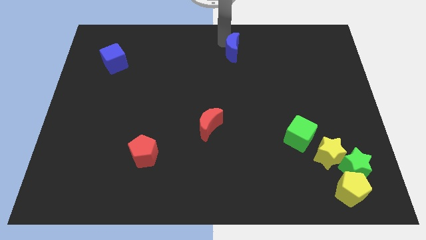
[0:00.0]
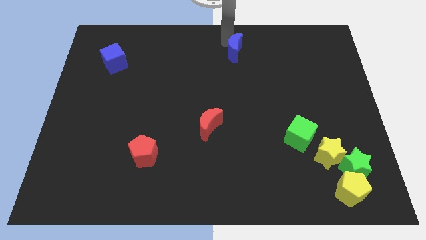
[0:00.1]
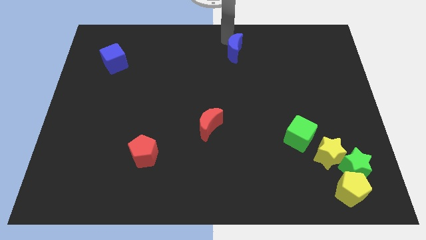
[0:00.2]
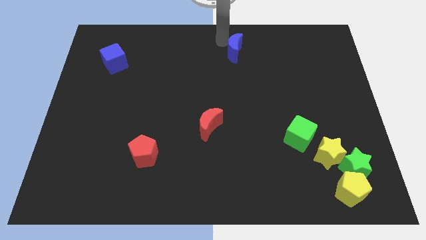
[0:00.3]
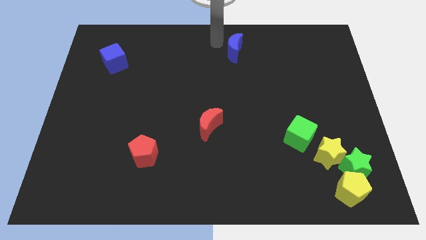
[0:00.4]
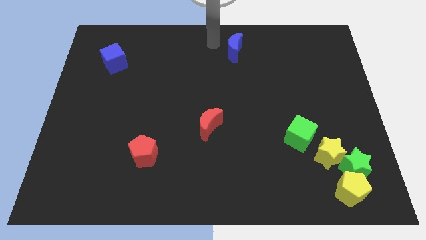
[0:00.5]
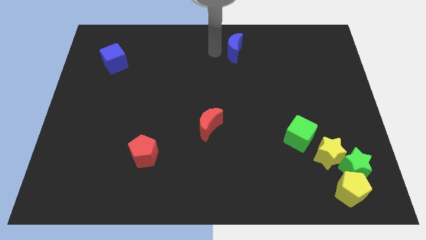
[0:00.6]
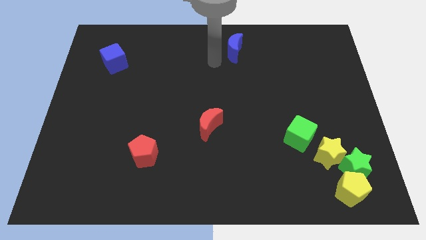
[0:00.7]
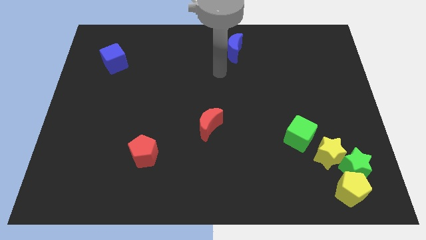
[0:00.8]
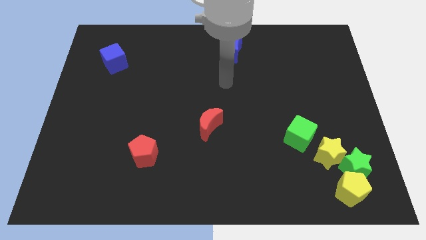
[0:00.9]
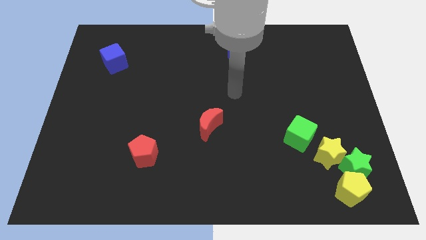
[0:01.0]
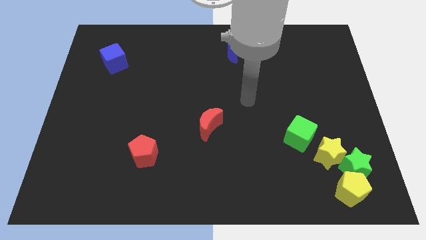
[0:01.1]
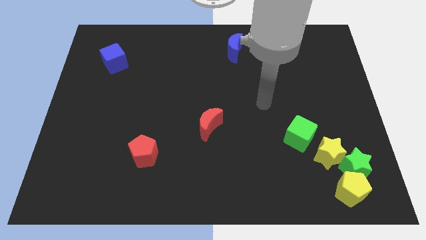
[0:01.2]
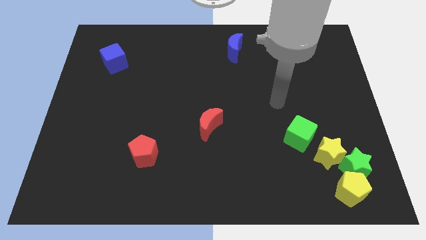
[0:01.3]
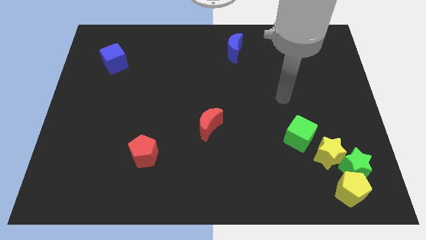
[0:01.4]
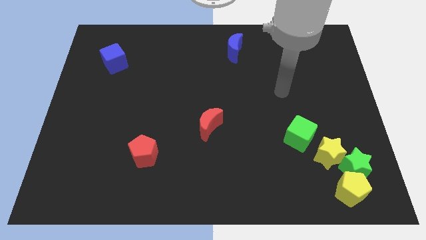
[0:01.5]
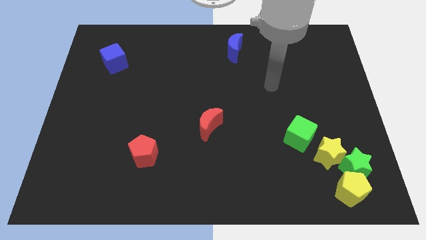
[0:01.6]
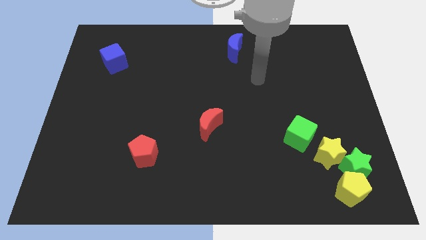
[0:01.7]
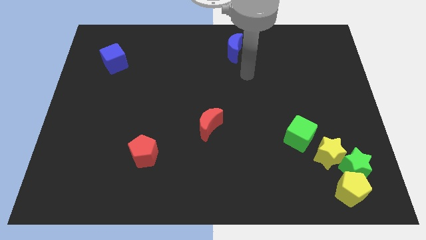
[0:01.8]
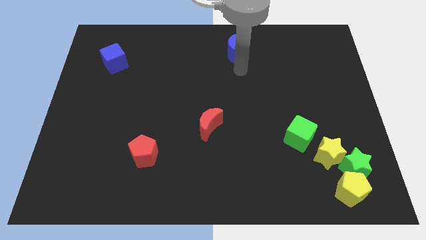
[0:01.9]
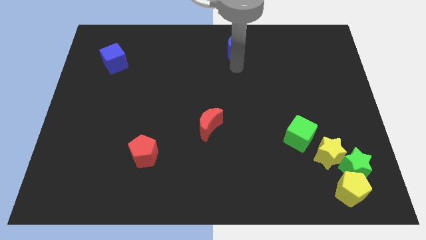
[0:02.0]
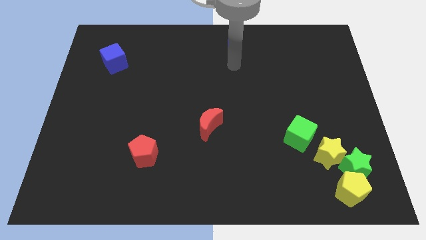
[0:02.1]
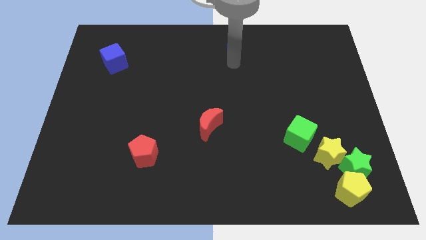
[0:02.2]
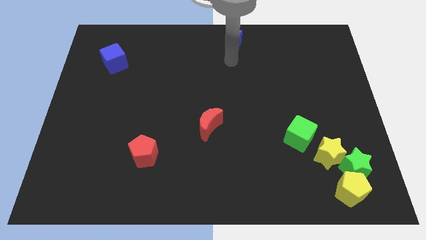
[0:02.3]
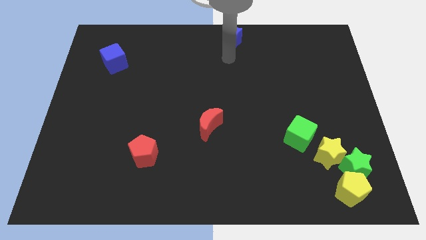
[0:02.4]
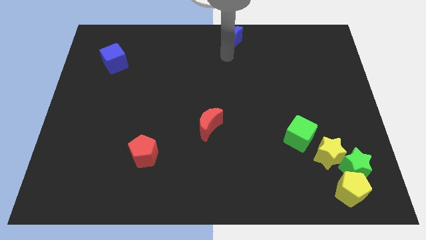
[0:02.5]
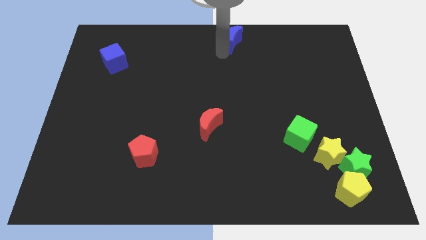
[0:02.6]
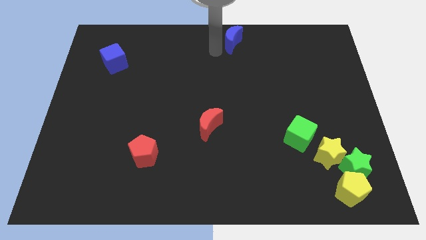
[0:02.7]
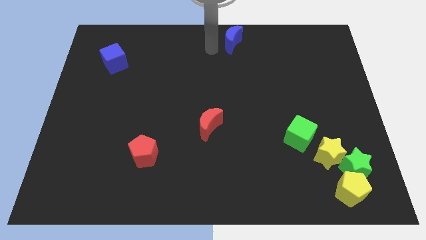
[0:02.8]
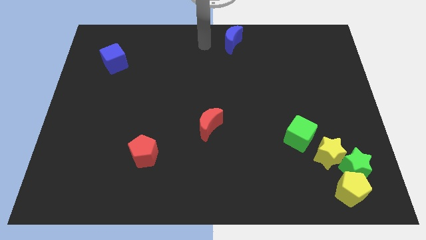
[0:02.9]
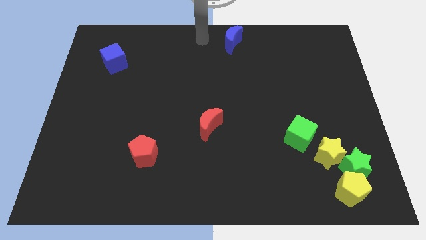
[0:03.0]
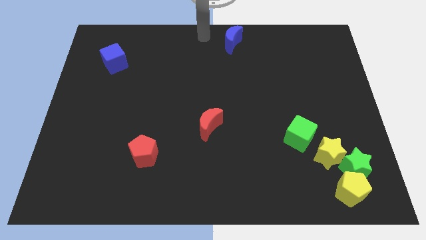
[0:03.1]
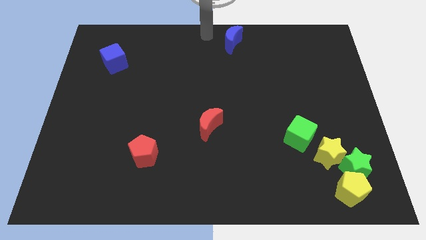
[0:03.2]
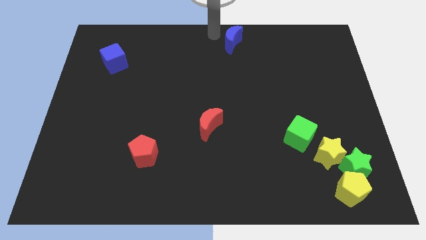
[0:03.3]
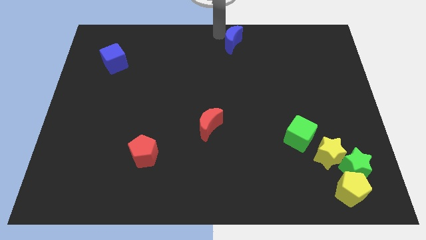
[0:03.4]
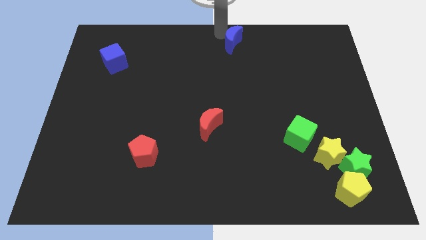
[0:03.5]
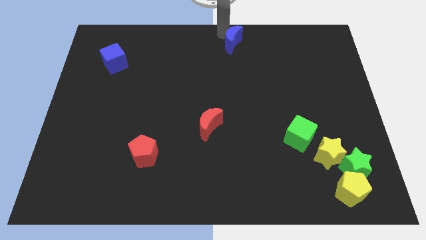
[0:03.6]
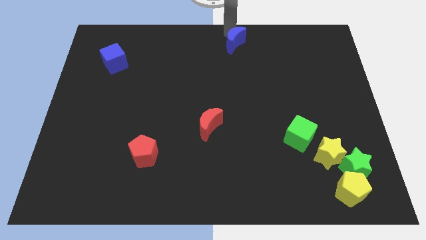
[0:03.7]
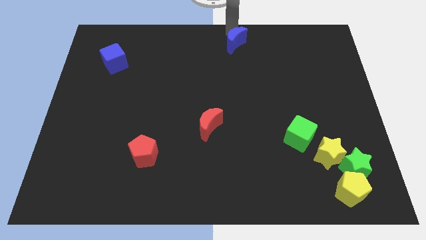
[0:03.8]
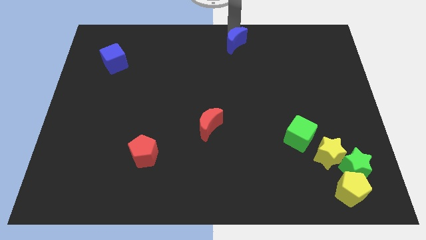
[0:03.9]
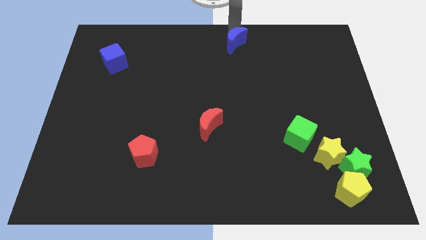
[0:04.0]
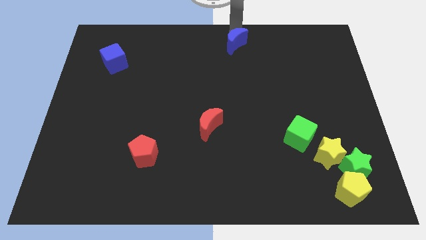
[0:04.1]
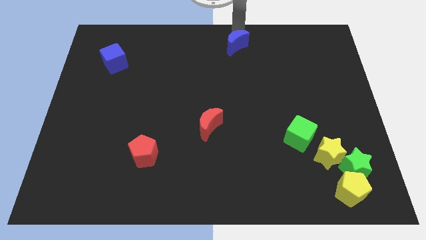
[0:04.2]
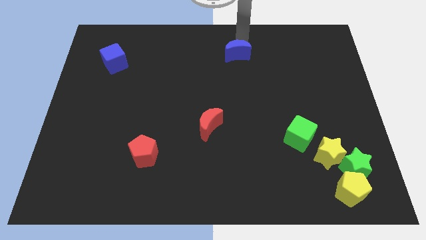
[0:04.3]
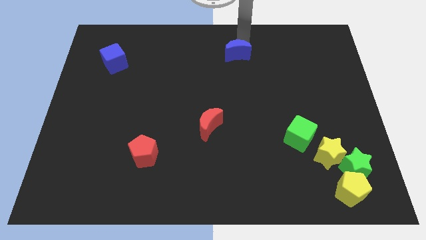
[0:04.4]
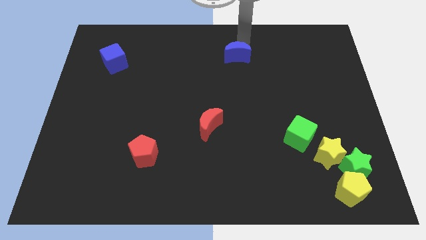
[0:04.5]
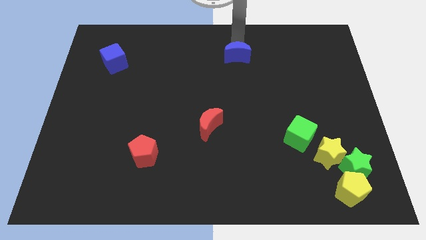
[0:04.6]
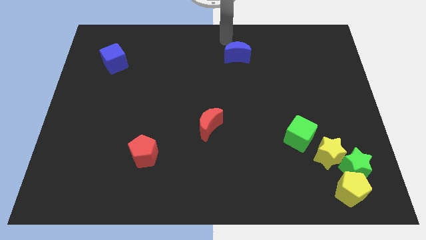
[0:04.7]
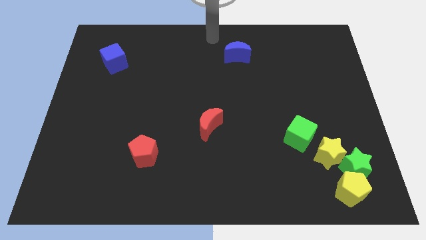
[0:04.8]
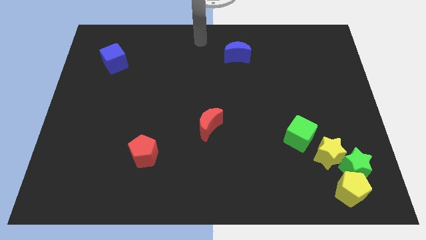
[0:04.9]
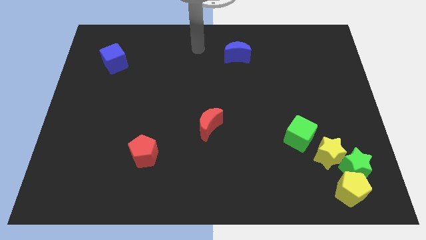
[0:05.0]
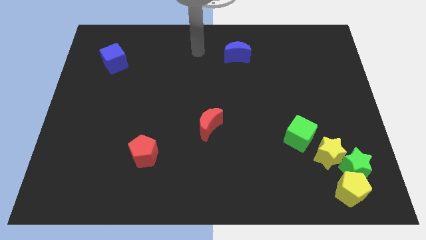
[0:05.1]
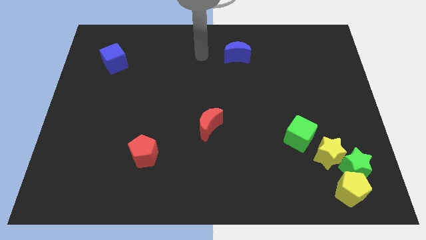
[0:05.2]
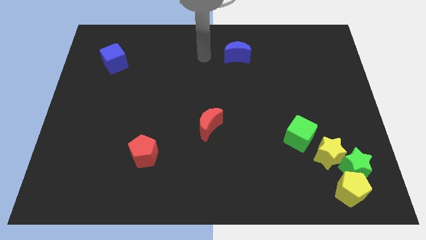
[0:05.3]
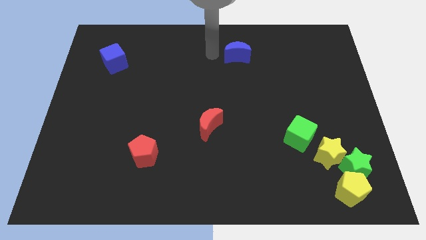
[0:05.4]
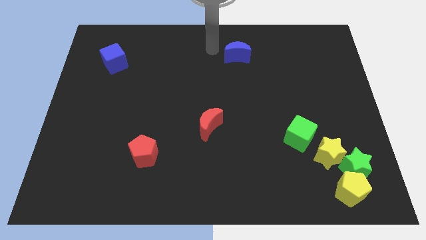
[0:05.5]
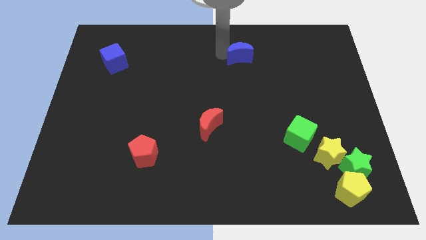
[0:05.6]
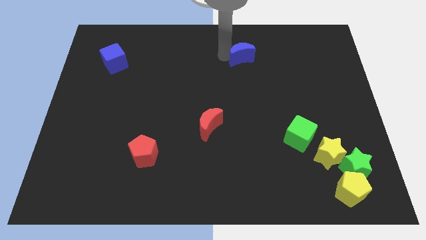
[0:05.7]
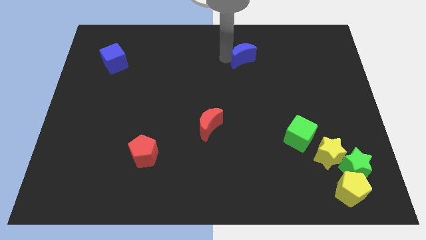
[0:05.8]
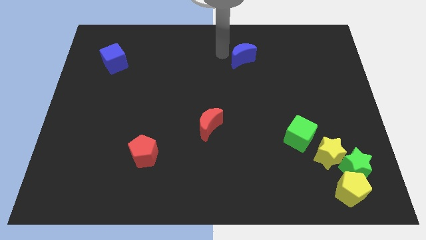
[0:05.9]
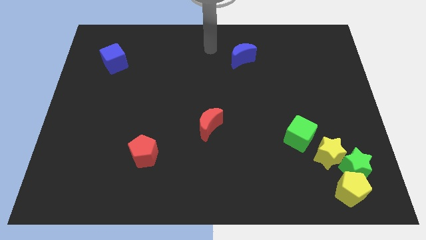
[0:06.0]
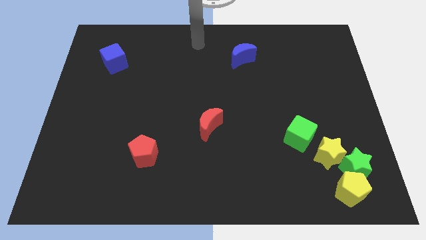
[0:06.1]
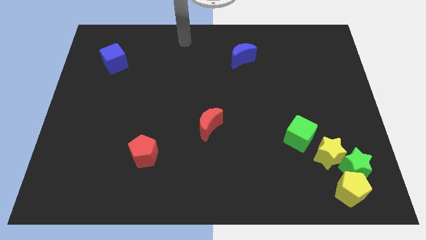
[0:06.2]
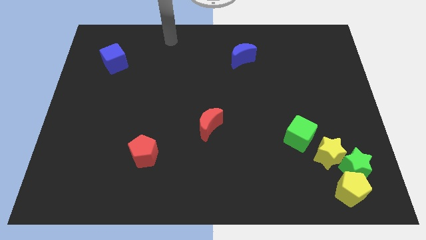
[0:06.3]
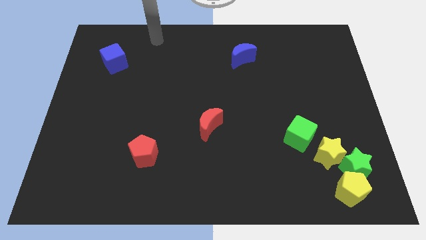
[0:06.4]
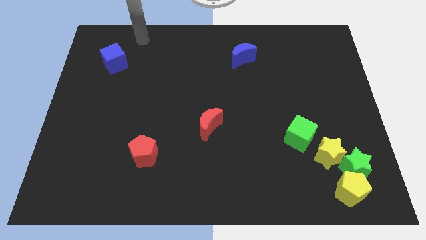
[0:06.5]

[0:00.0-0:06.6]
move the blue moon to the center of the board

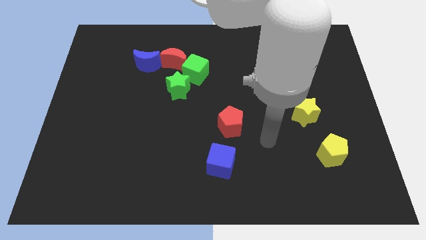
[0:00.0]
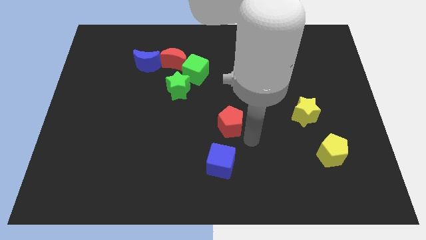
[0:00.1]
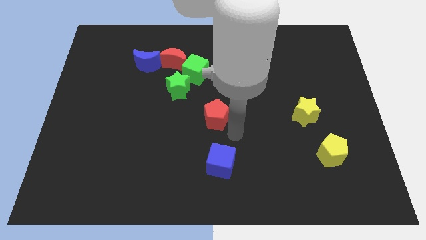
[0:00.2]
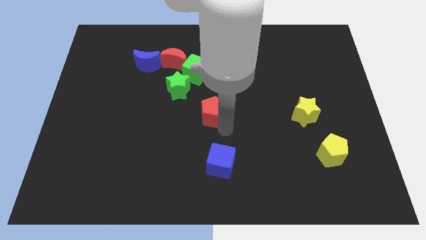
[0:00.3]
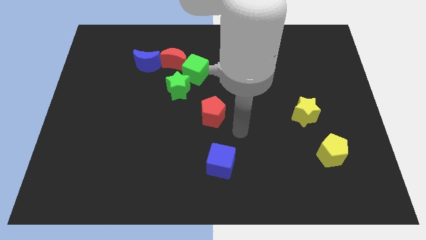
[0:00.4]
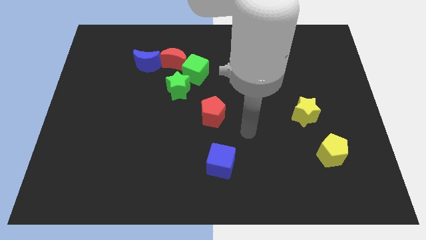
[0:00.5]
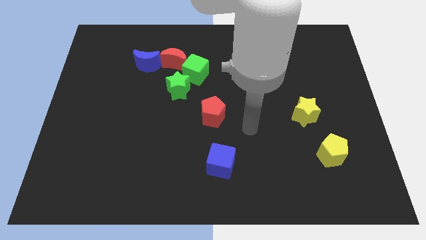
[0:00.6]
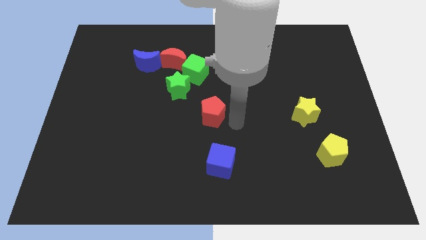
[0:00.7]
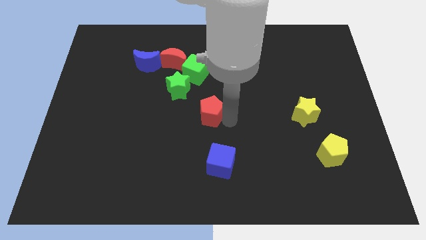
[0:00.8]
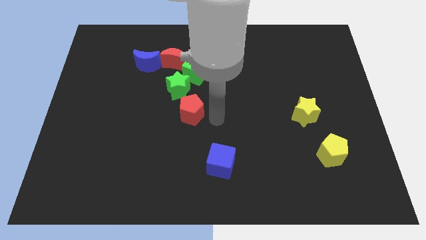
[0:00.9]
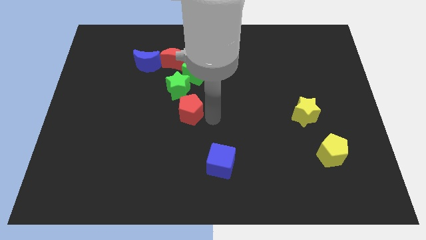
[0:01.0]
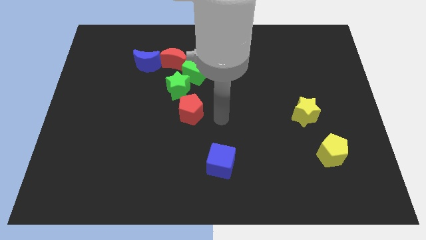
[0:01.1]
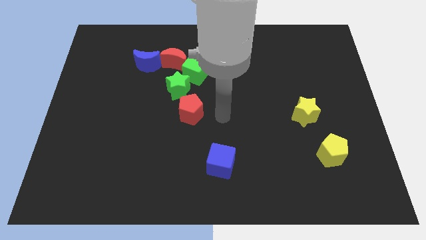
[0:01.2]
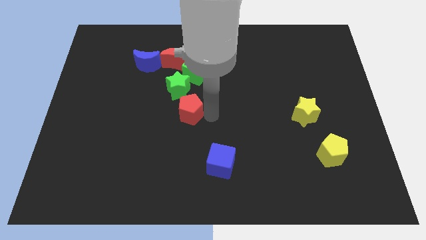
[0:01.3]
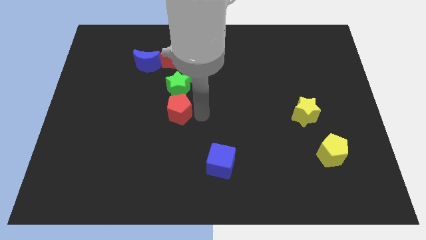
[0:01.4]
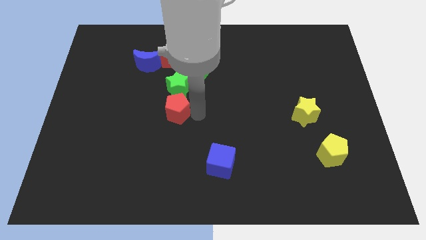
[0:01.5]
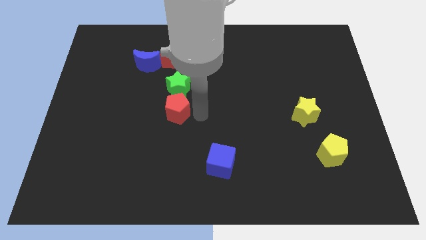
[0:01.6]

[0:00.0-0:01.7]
push the red pentagon to the bottom of the green star

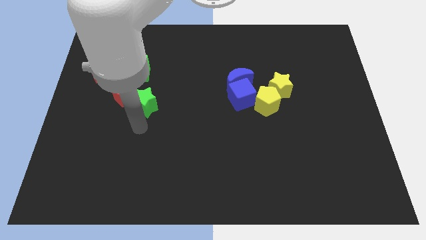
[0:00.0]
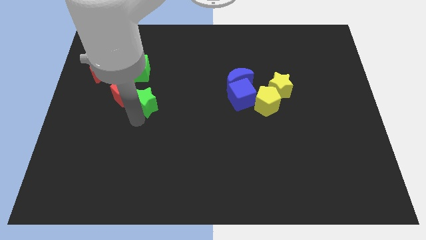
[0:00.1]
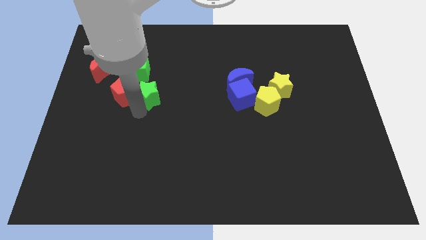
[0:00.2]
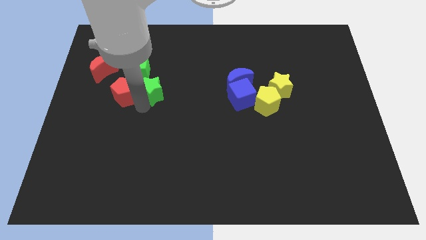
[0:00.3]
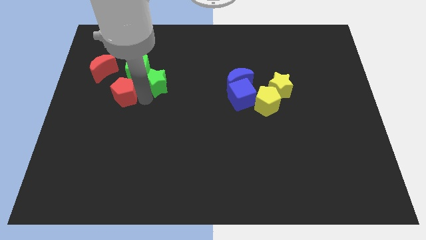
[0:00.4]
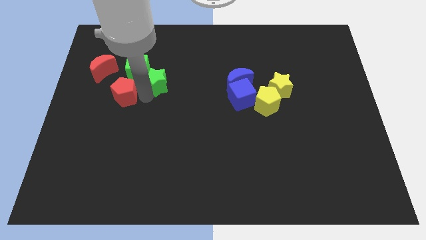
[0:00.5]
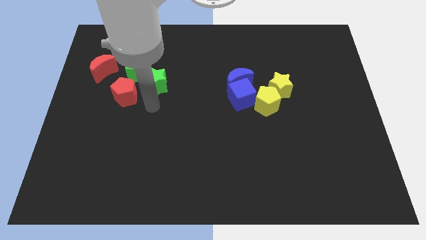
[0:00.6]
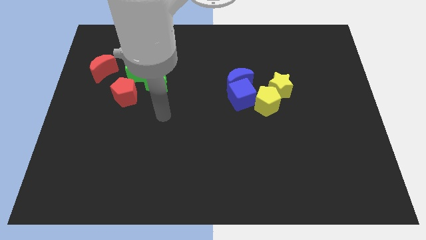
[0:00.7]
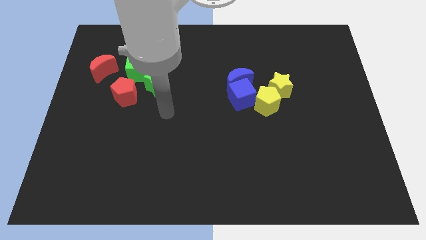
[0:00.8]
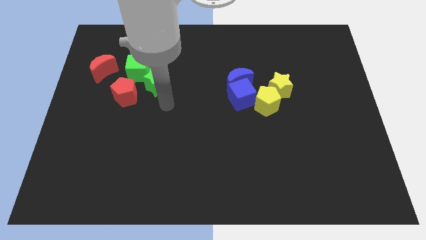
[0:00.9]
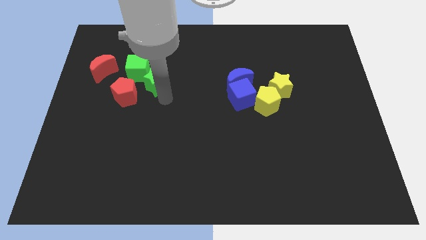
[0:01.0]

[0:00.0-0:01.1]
move the green star into the green cube
